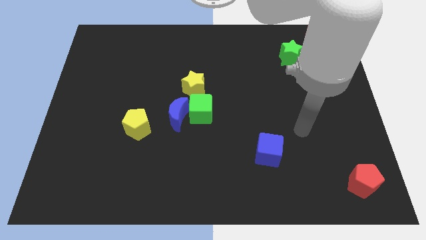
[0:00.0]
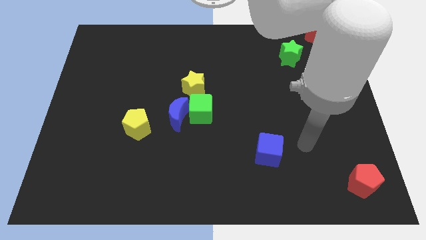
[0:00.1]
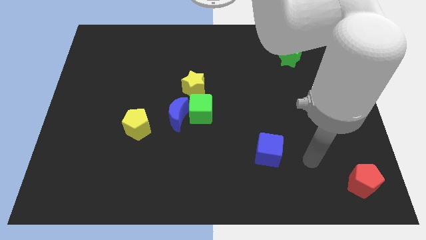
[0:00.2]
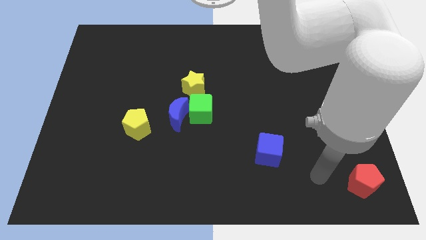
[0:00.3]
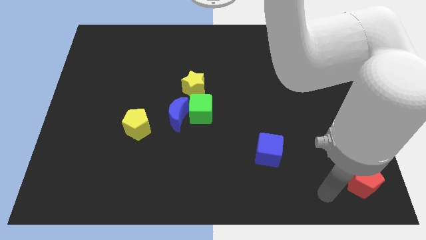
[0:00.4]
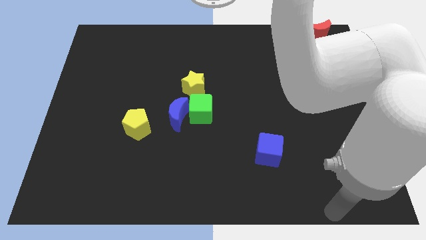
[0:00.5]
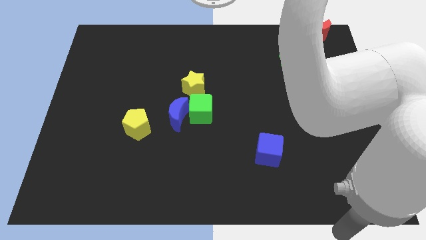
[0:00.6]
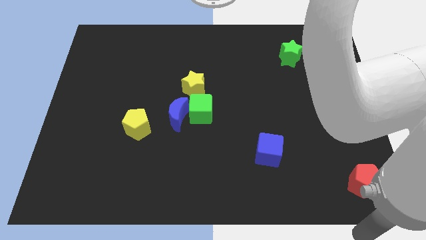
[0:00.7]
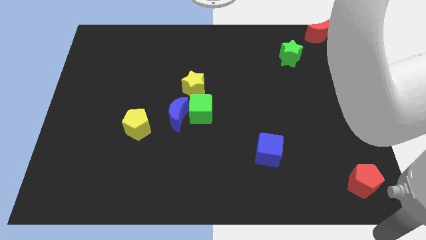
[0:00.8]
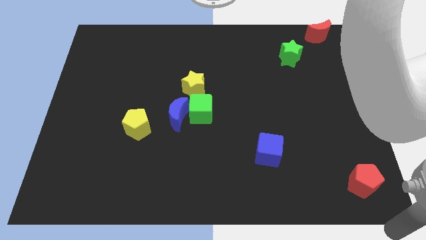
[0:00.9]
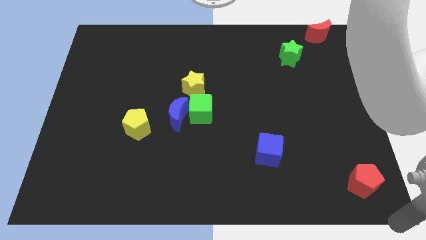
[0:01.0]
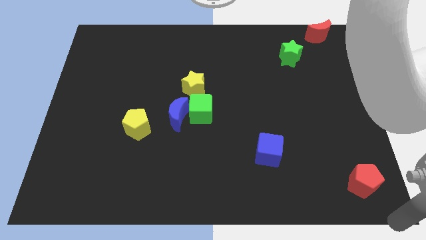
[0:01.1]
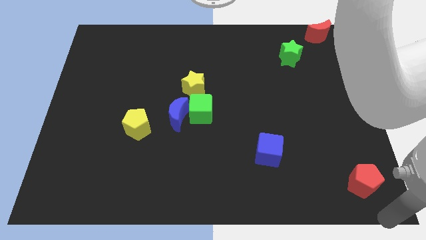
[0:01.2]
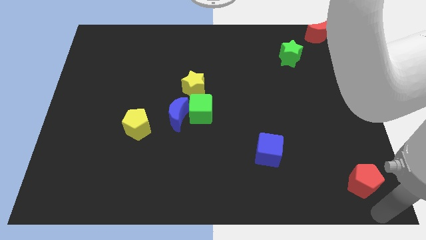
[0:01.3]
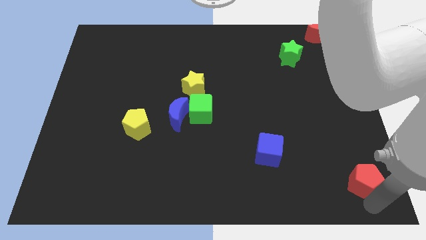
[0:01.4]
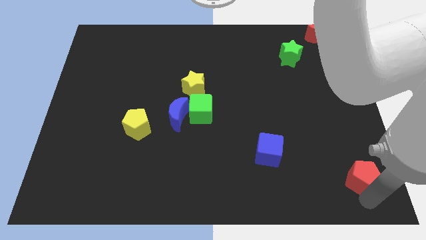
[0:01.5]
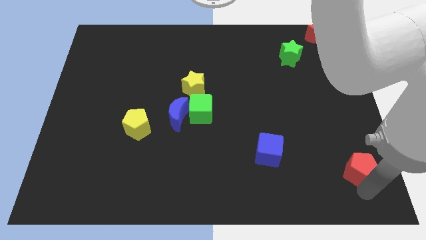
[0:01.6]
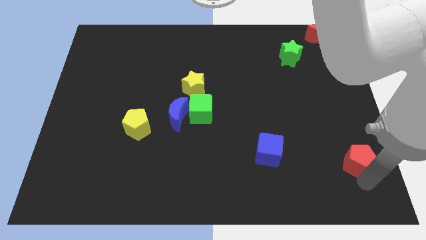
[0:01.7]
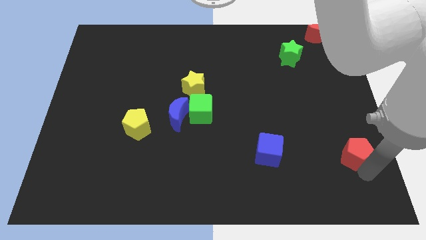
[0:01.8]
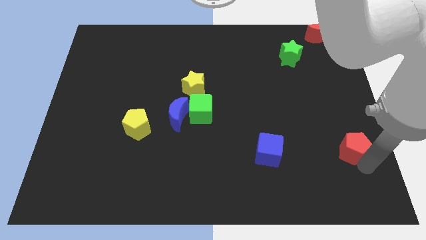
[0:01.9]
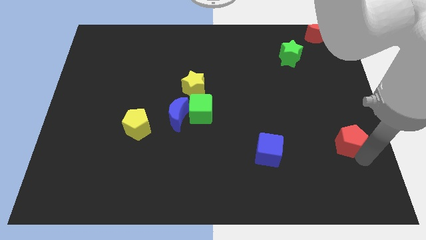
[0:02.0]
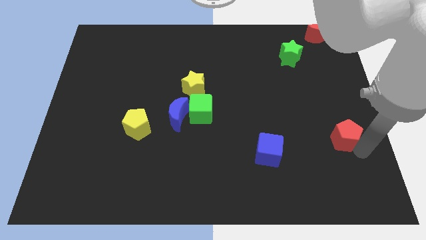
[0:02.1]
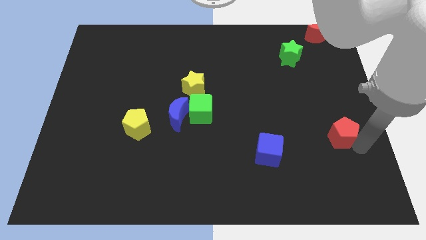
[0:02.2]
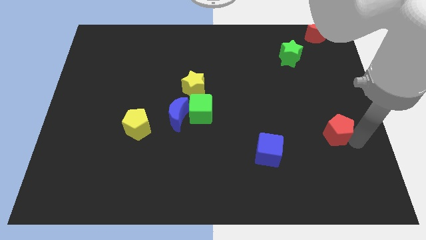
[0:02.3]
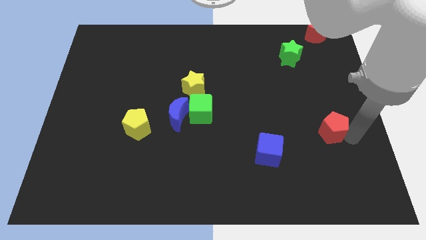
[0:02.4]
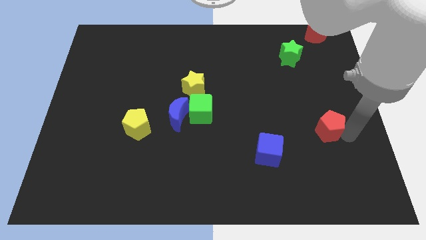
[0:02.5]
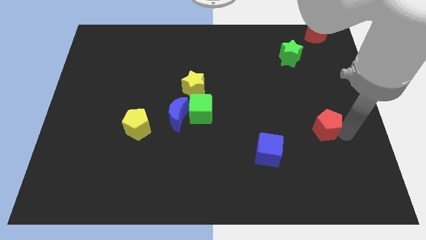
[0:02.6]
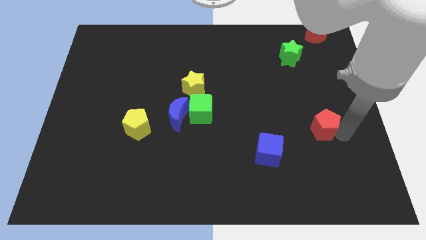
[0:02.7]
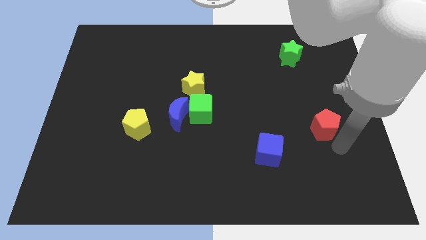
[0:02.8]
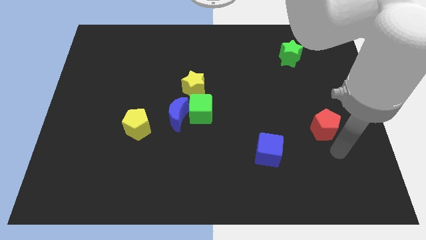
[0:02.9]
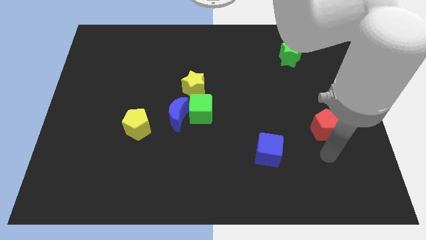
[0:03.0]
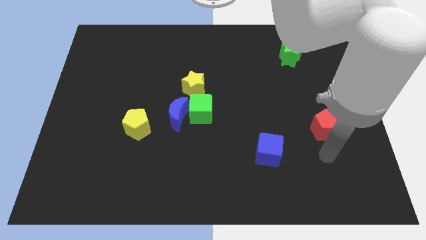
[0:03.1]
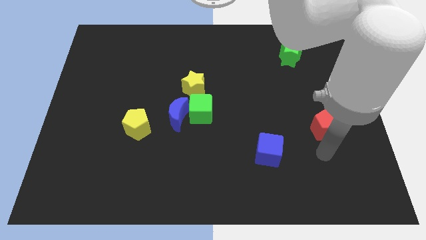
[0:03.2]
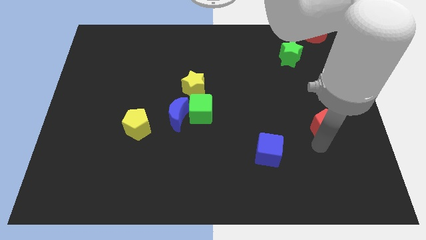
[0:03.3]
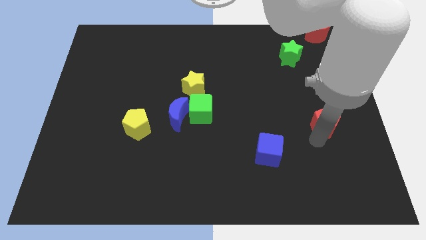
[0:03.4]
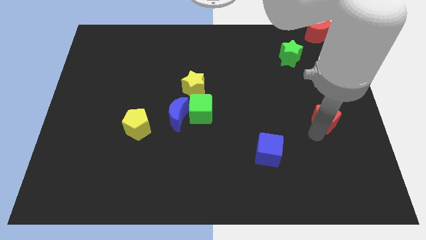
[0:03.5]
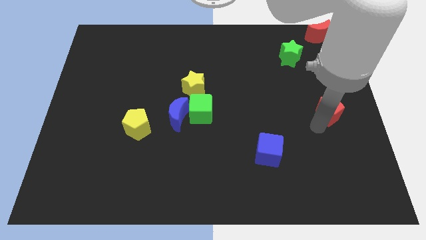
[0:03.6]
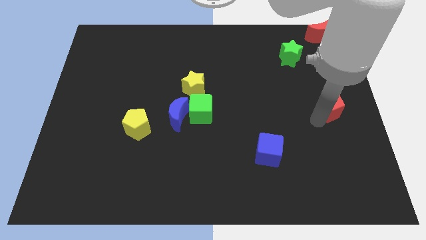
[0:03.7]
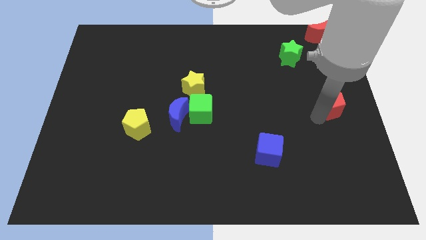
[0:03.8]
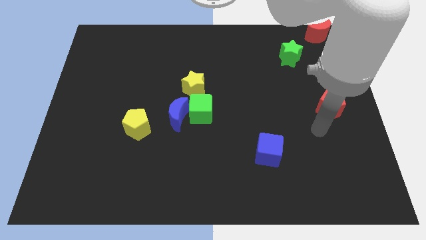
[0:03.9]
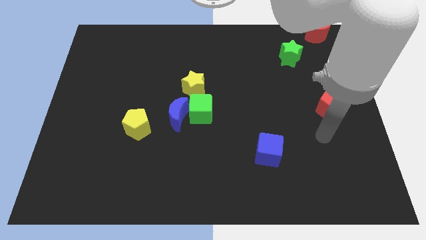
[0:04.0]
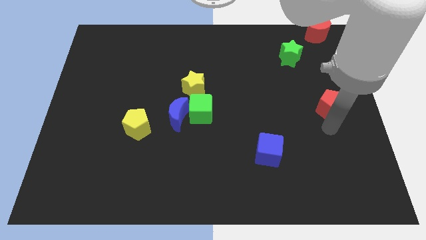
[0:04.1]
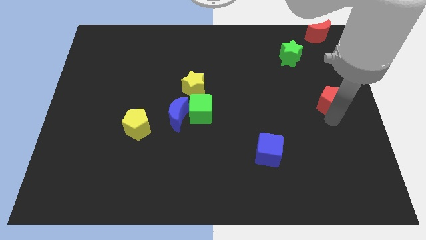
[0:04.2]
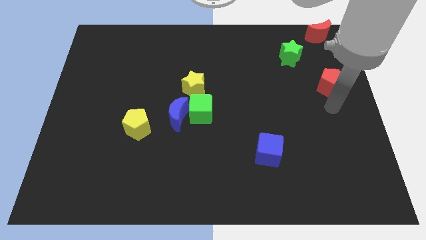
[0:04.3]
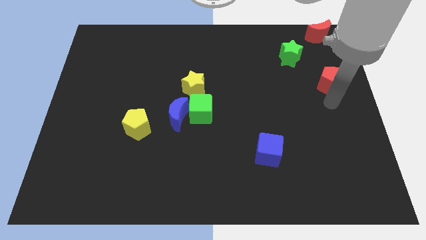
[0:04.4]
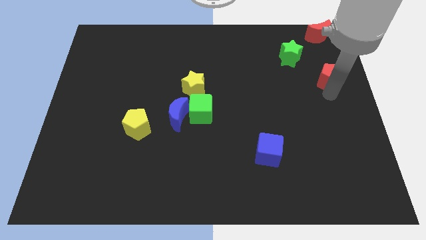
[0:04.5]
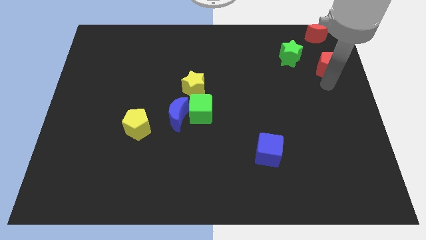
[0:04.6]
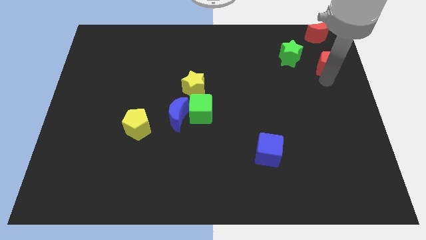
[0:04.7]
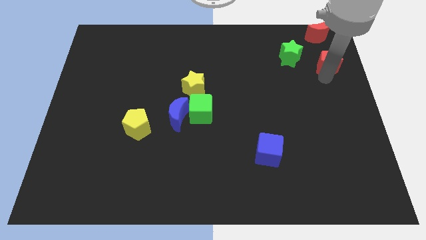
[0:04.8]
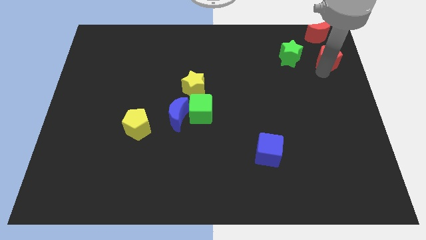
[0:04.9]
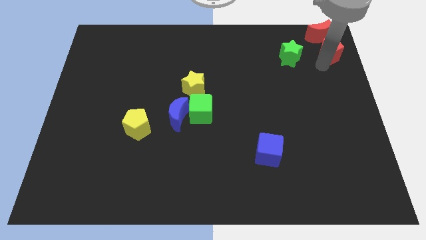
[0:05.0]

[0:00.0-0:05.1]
put the red pentagon to the right of the green star

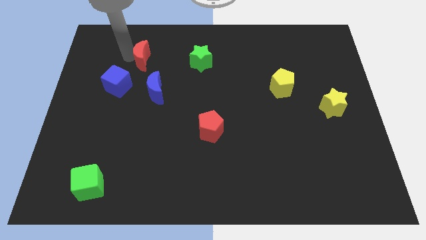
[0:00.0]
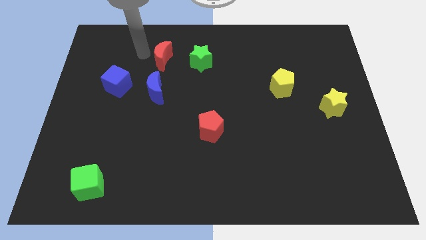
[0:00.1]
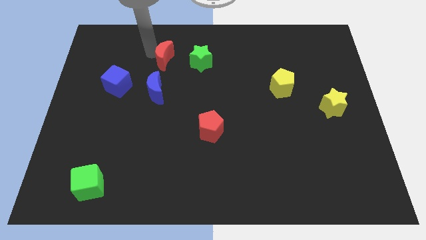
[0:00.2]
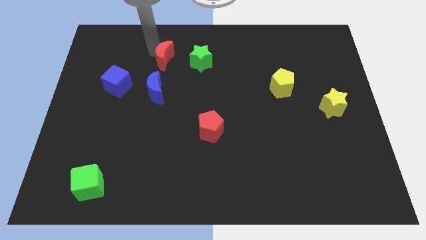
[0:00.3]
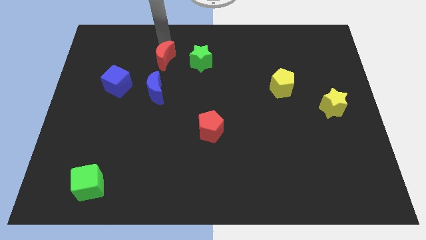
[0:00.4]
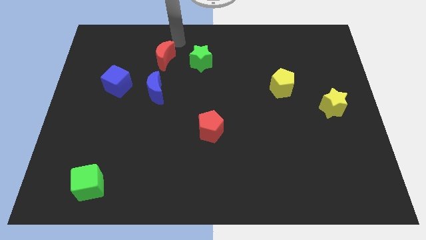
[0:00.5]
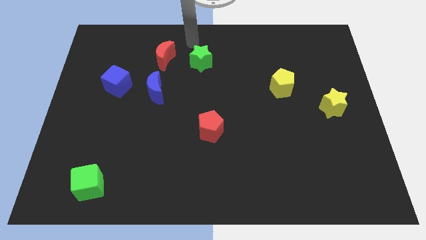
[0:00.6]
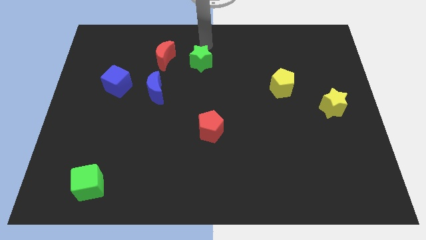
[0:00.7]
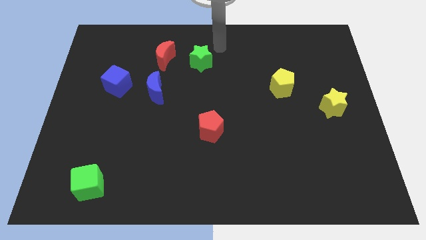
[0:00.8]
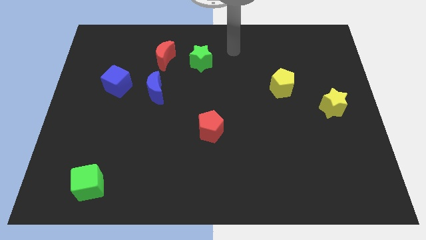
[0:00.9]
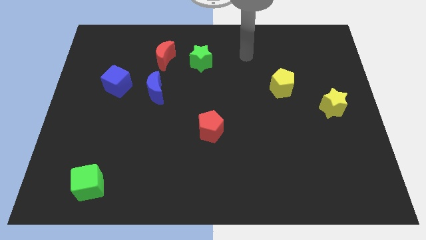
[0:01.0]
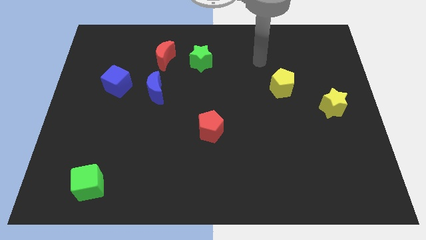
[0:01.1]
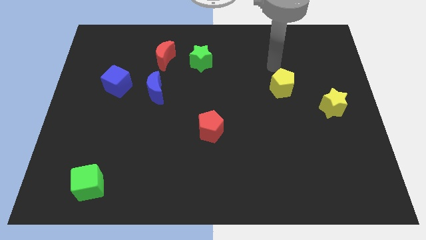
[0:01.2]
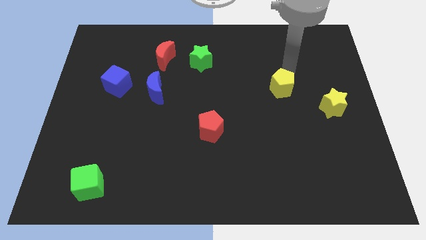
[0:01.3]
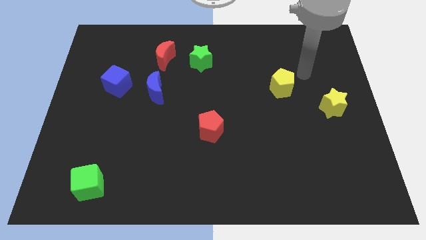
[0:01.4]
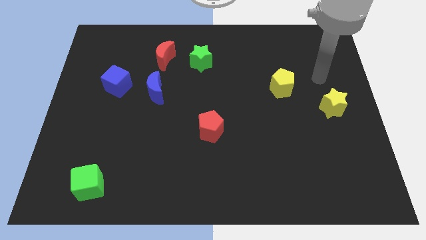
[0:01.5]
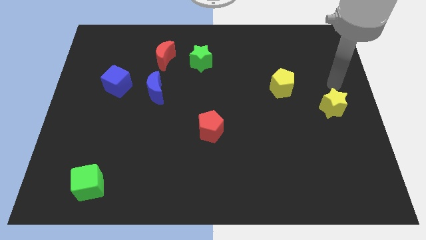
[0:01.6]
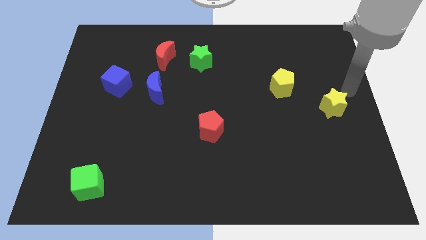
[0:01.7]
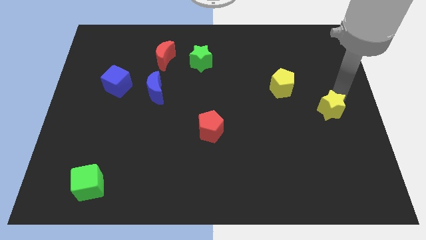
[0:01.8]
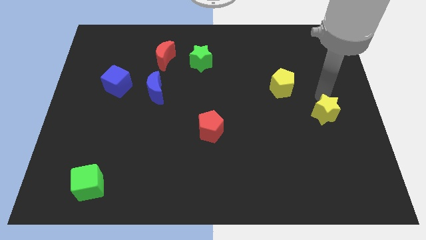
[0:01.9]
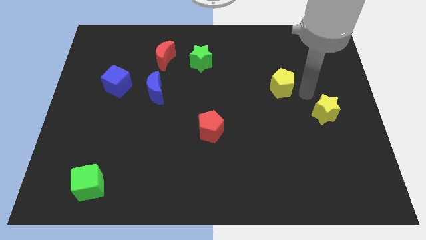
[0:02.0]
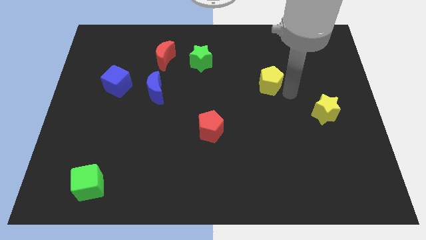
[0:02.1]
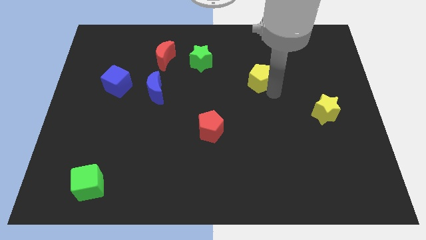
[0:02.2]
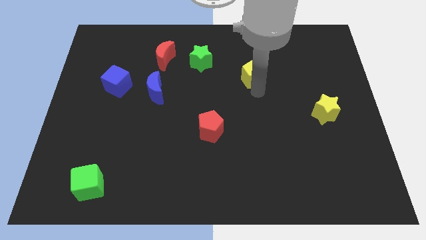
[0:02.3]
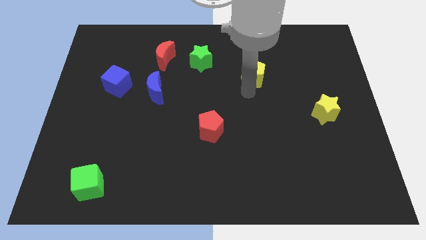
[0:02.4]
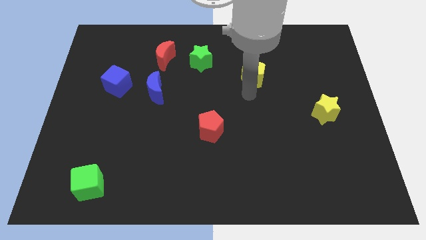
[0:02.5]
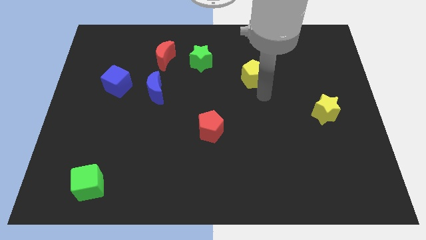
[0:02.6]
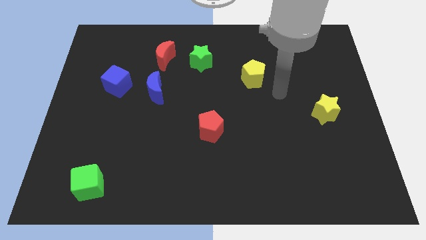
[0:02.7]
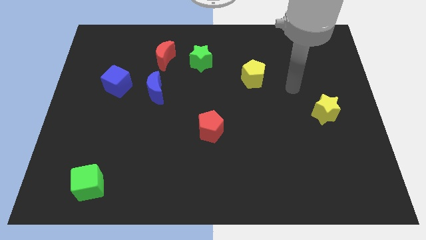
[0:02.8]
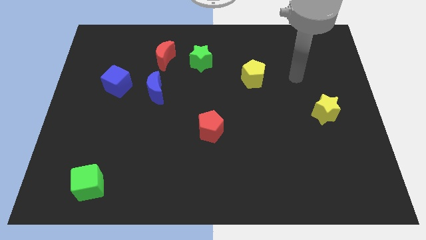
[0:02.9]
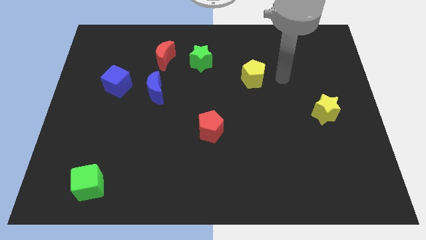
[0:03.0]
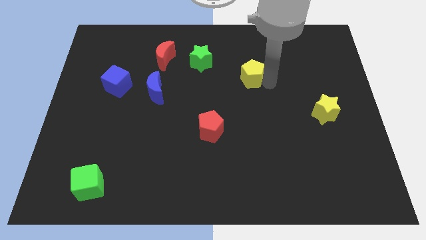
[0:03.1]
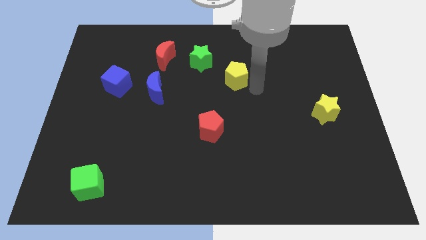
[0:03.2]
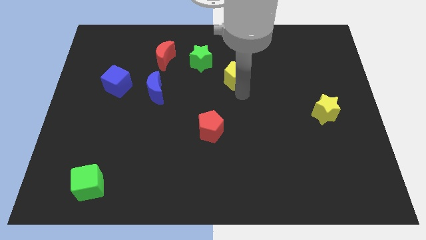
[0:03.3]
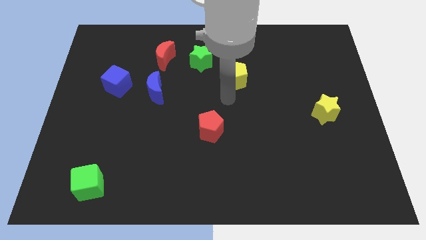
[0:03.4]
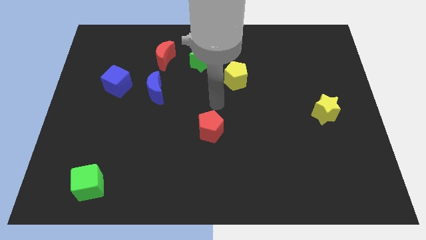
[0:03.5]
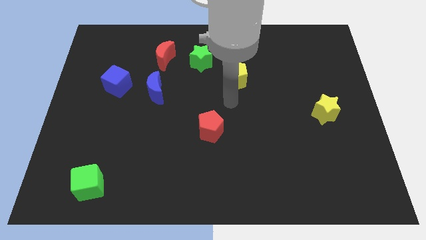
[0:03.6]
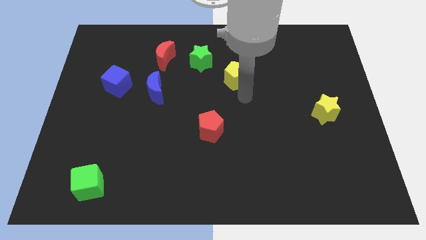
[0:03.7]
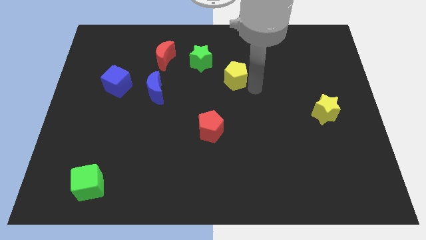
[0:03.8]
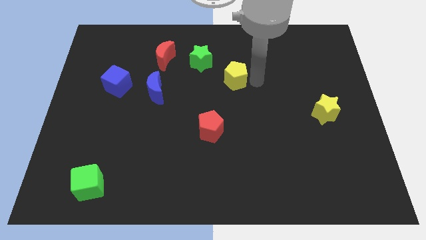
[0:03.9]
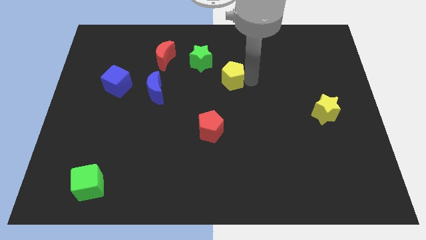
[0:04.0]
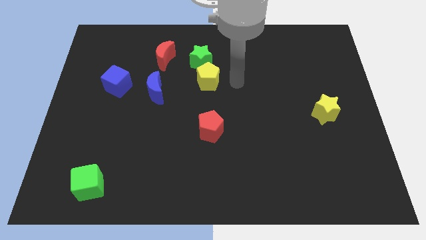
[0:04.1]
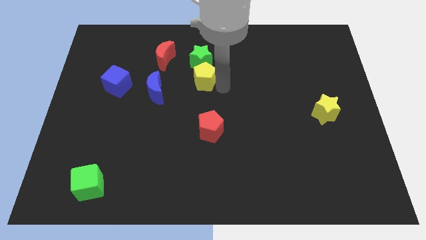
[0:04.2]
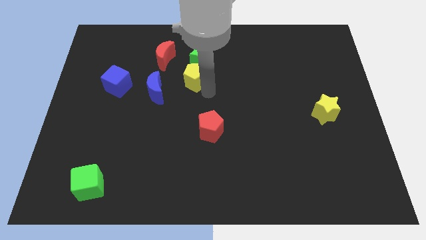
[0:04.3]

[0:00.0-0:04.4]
place the yellow pentagon below the green star
